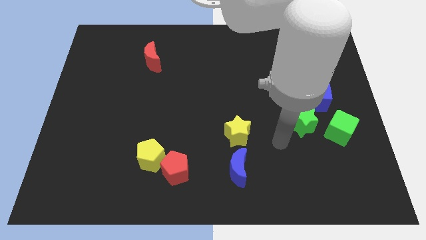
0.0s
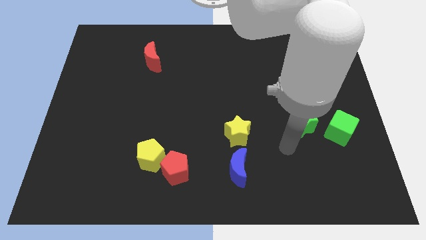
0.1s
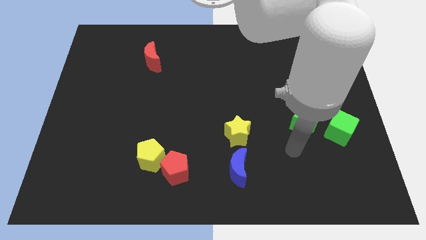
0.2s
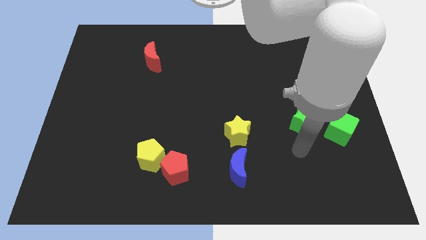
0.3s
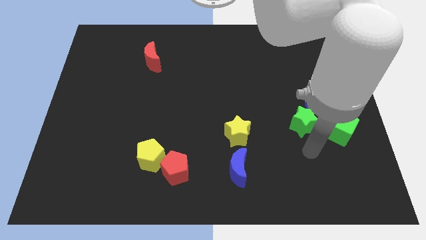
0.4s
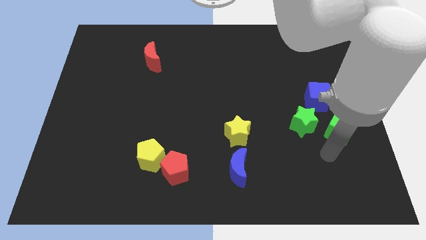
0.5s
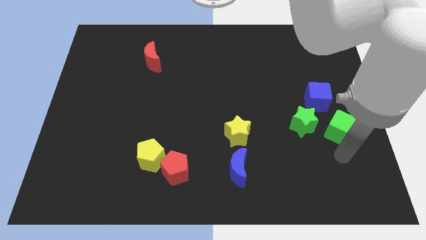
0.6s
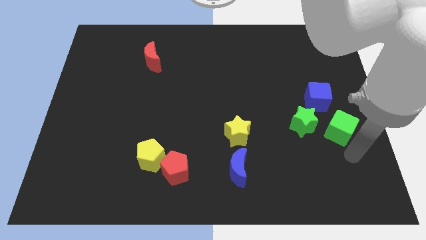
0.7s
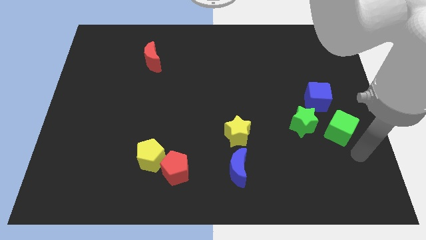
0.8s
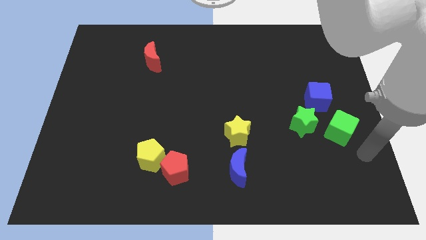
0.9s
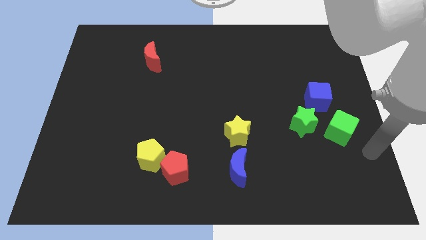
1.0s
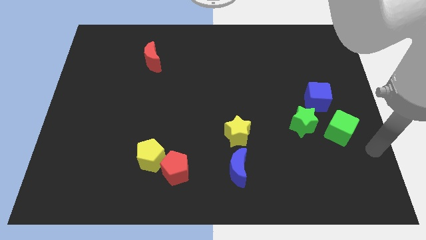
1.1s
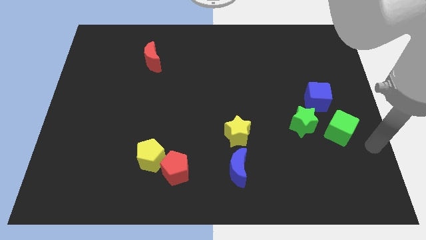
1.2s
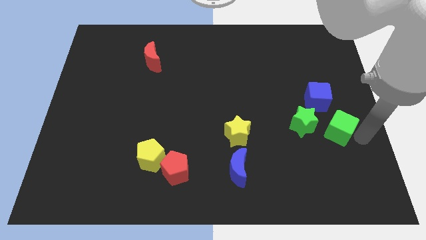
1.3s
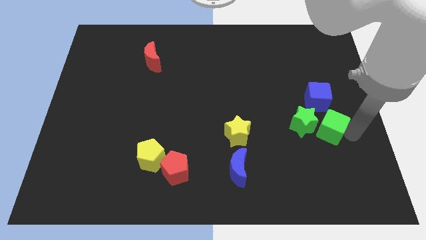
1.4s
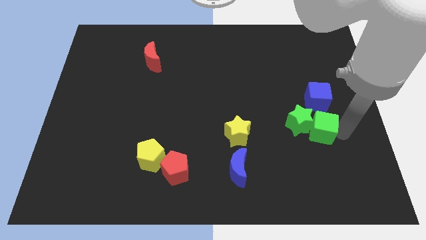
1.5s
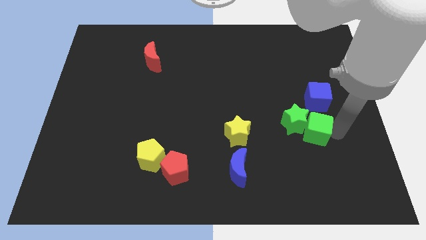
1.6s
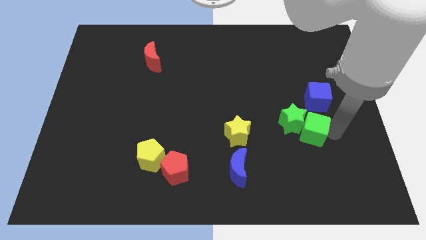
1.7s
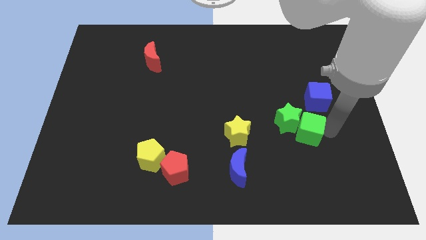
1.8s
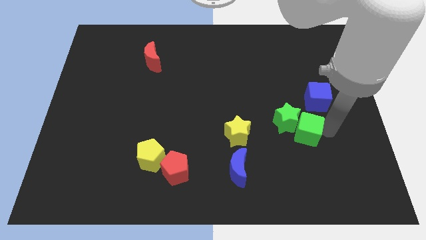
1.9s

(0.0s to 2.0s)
push the green cube into the green star

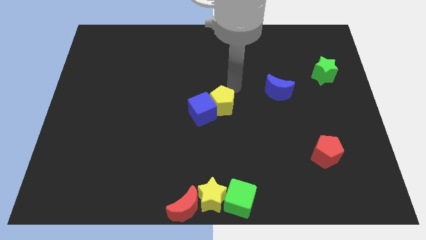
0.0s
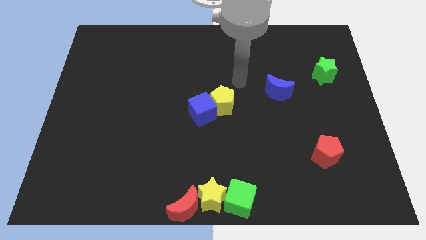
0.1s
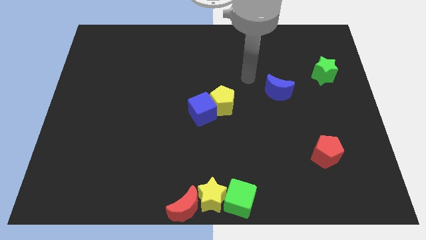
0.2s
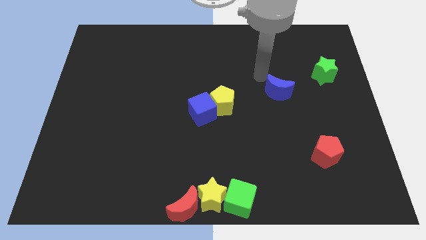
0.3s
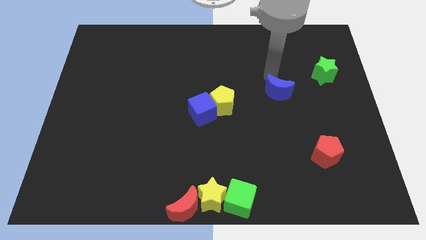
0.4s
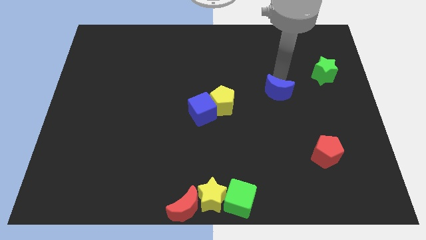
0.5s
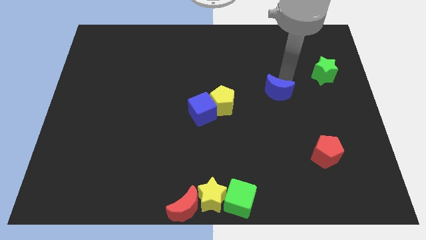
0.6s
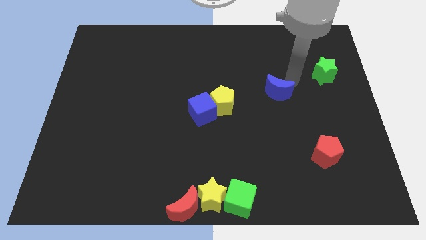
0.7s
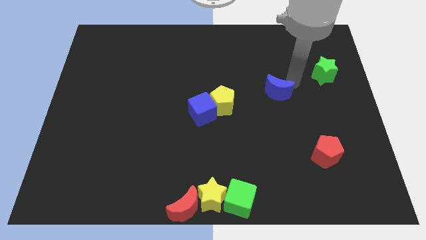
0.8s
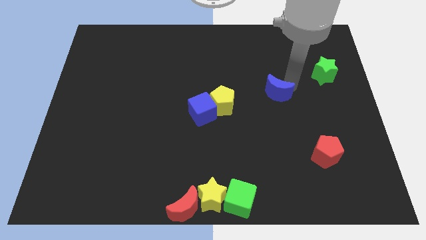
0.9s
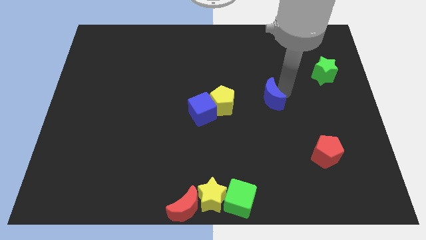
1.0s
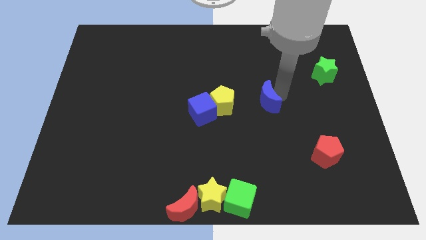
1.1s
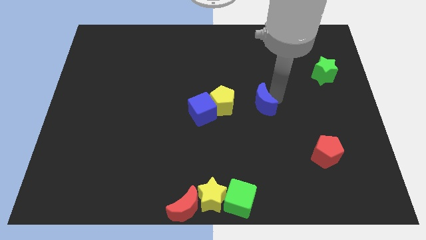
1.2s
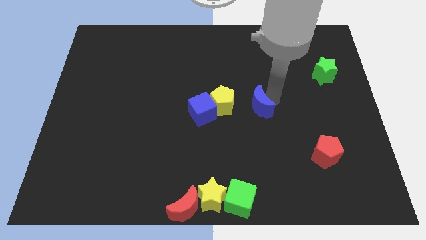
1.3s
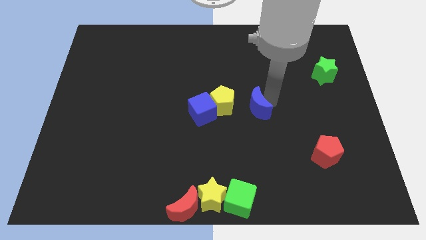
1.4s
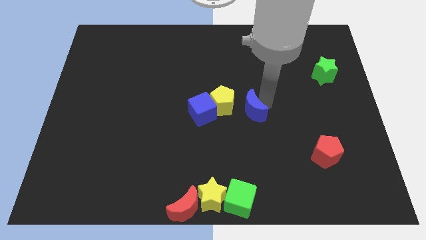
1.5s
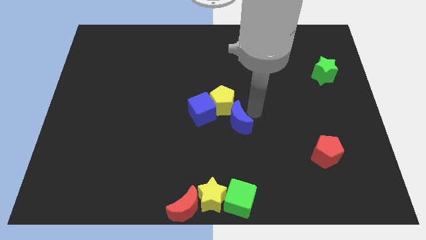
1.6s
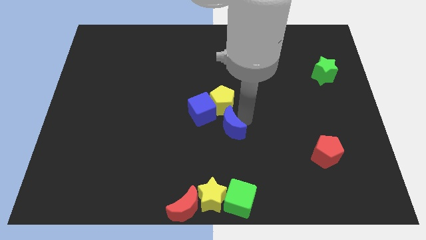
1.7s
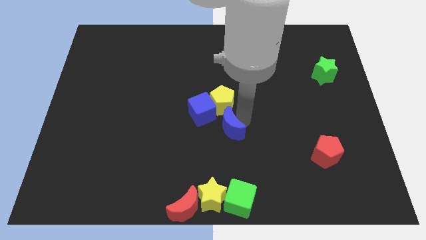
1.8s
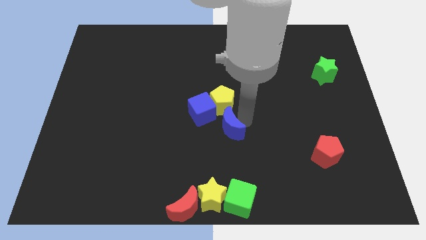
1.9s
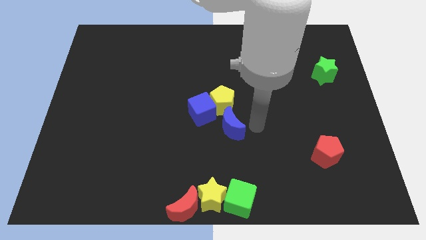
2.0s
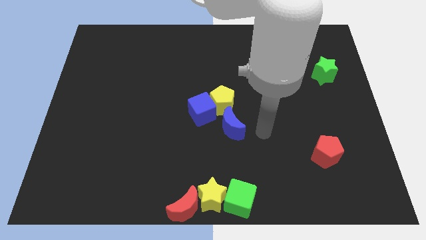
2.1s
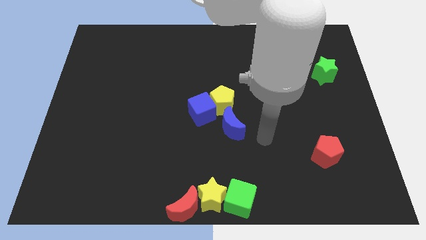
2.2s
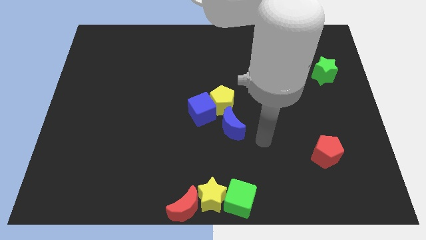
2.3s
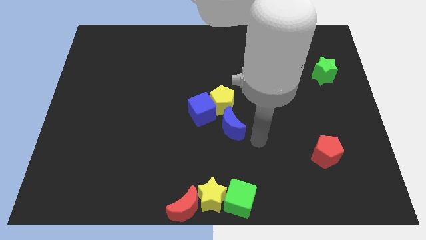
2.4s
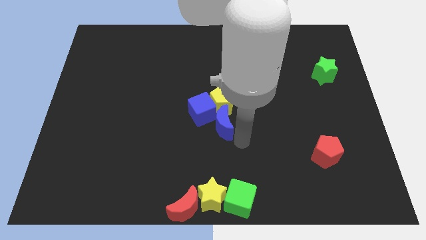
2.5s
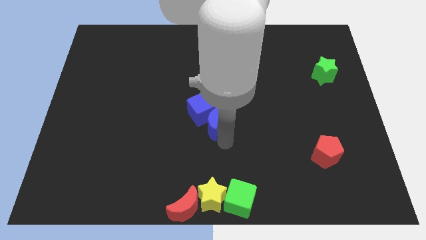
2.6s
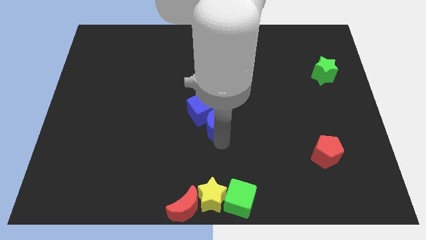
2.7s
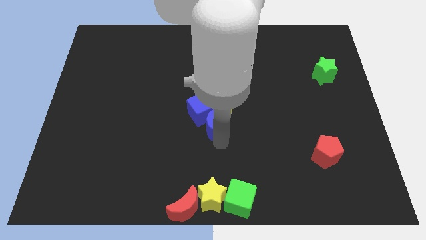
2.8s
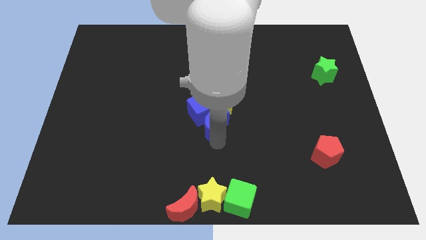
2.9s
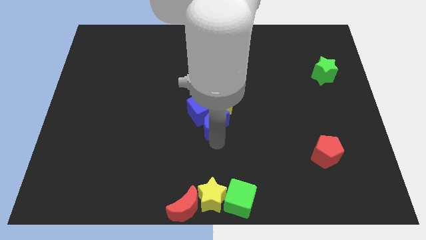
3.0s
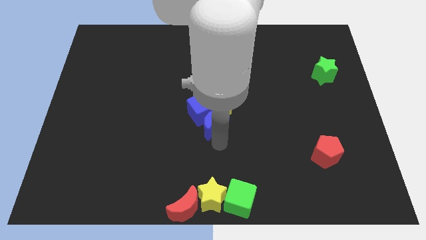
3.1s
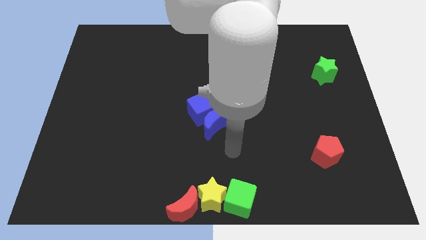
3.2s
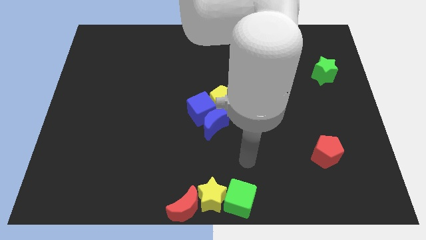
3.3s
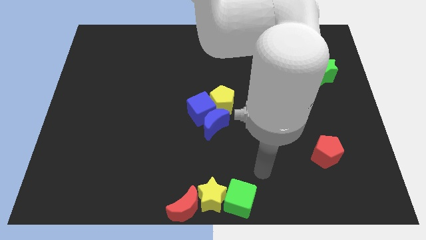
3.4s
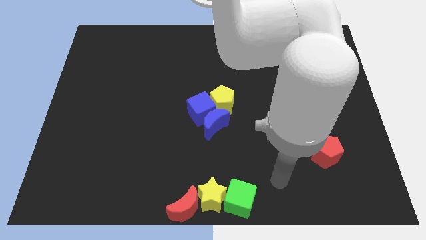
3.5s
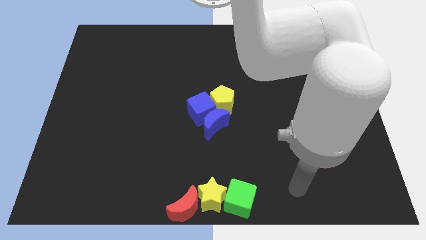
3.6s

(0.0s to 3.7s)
move the blue moon into blue cube

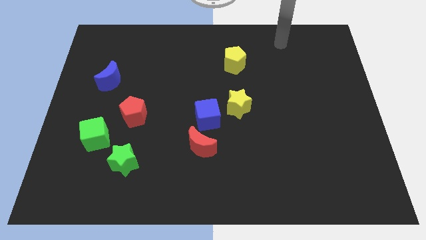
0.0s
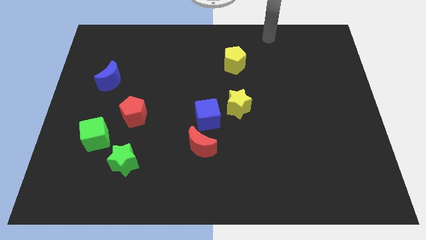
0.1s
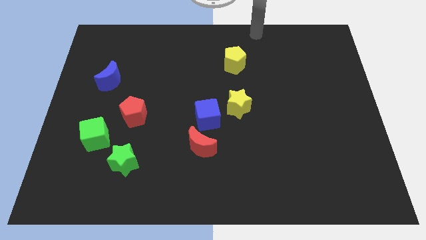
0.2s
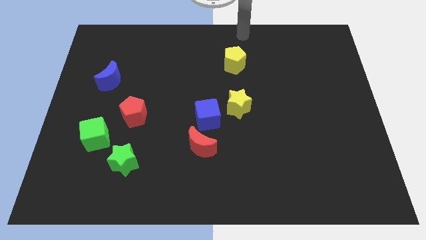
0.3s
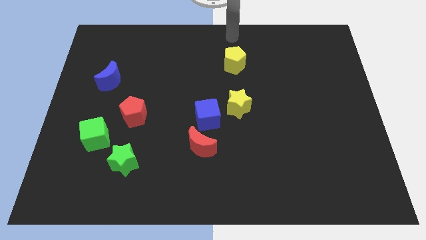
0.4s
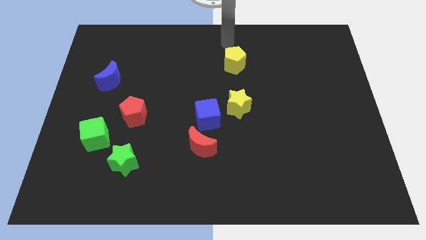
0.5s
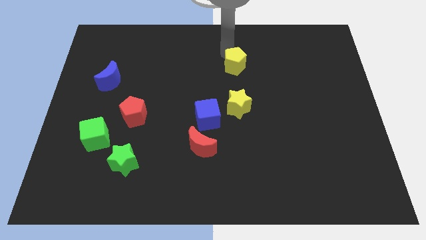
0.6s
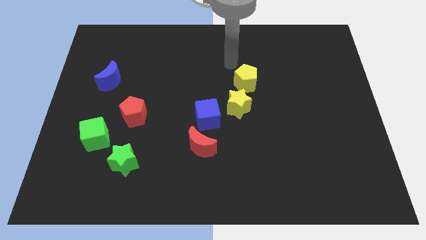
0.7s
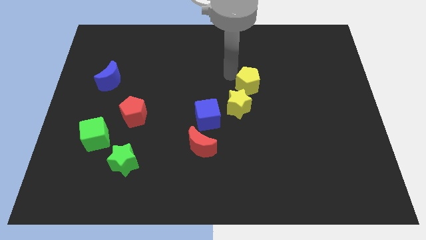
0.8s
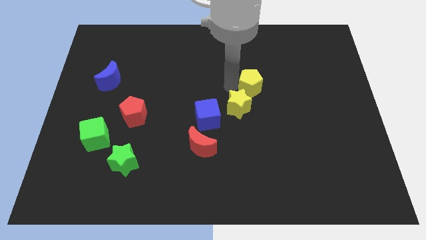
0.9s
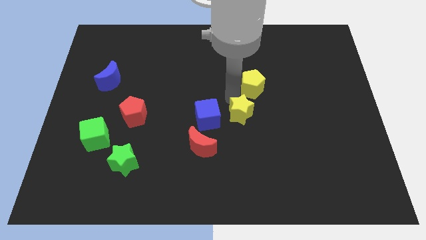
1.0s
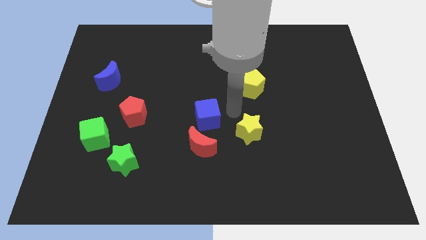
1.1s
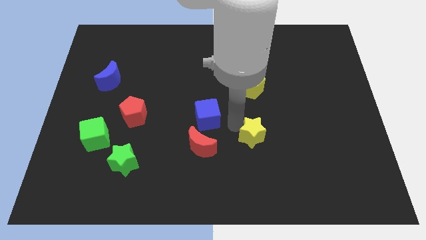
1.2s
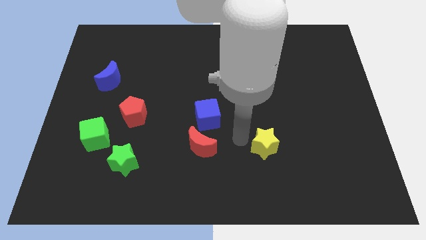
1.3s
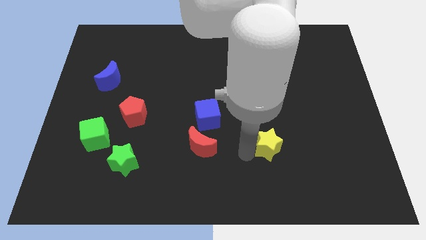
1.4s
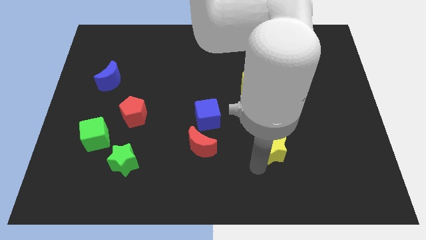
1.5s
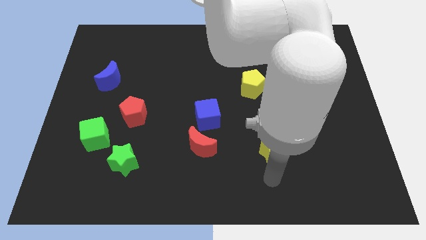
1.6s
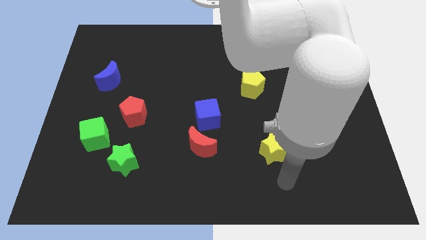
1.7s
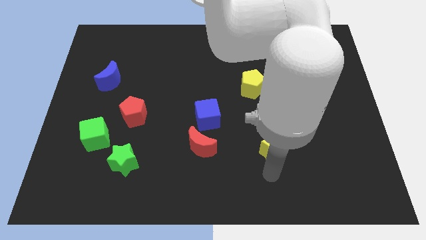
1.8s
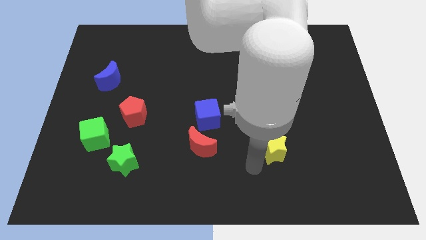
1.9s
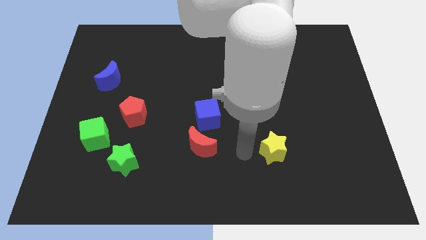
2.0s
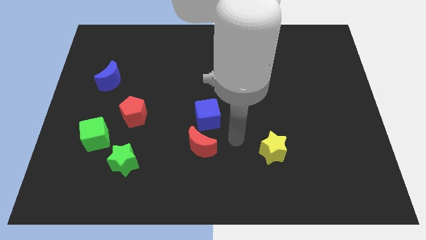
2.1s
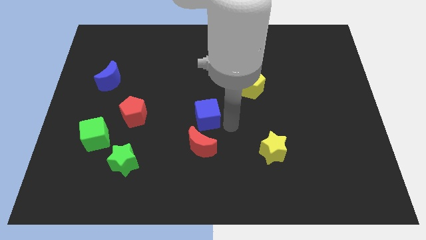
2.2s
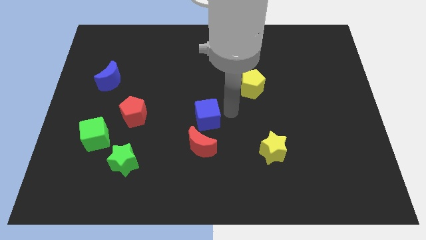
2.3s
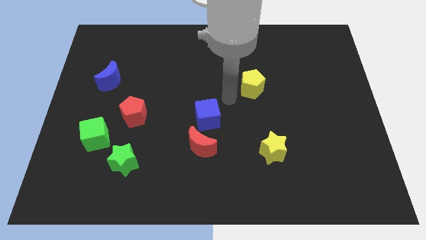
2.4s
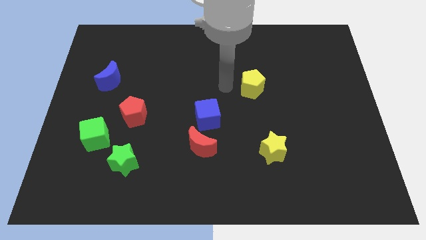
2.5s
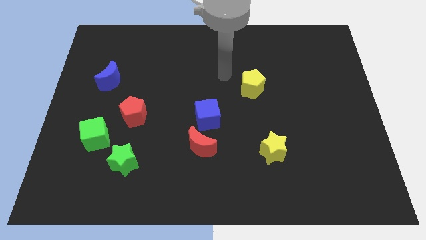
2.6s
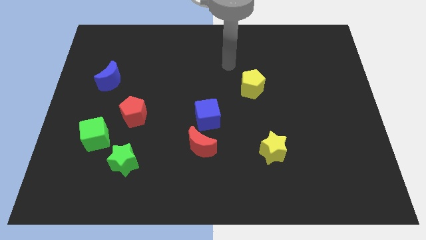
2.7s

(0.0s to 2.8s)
separate the yellow star from the yellow pentagon

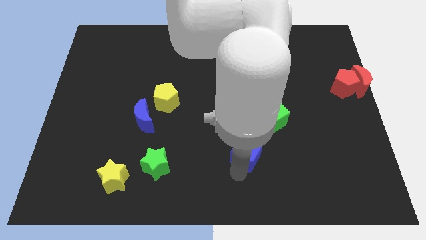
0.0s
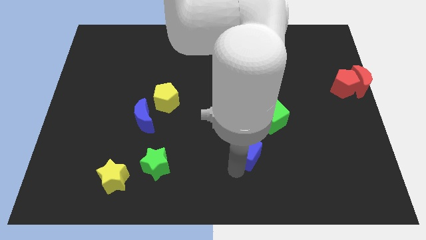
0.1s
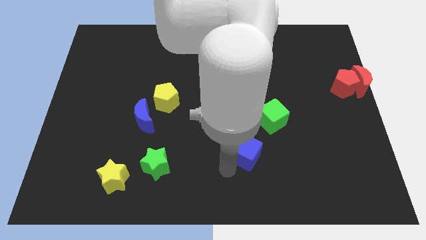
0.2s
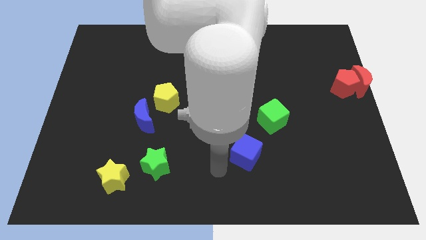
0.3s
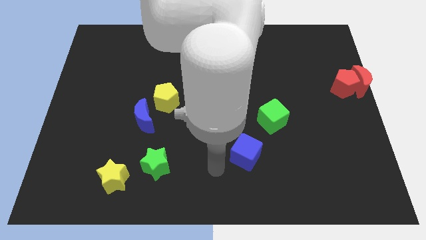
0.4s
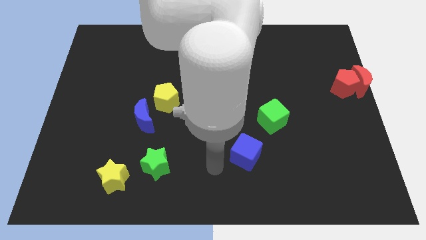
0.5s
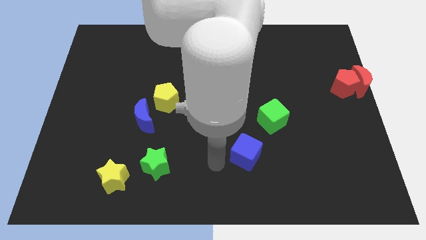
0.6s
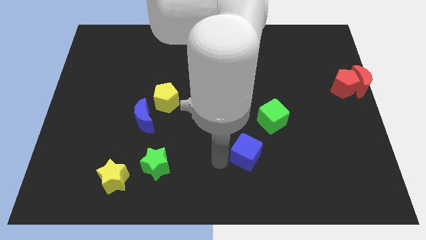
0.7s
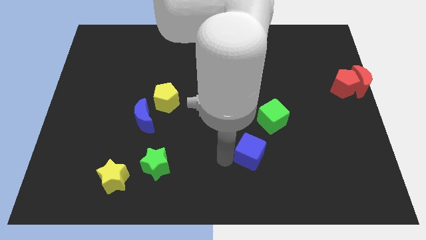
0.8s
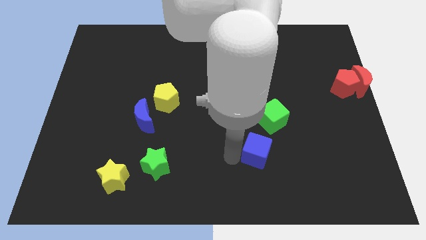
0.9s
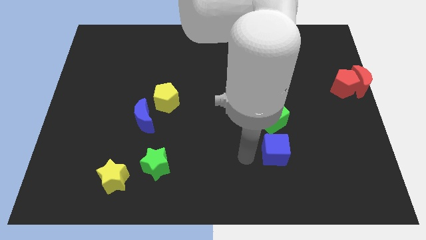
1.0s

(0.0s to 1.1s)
push blue cube below green cube
